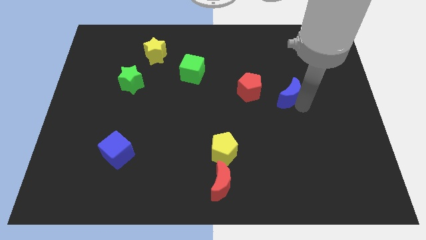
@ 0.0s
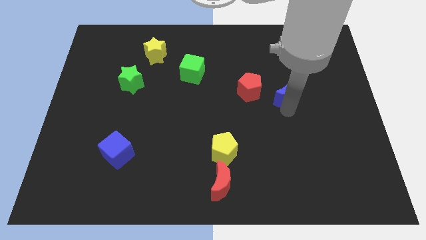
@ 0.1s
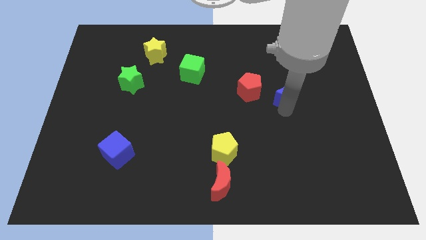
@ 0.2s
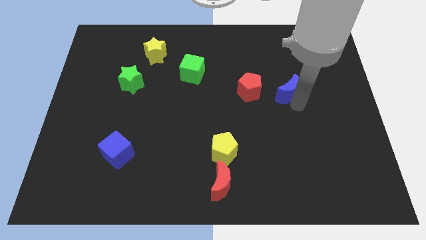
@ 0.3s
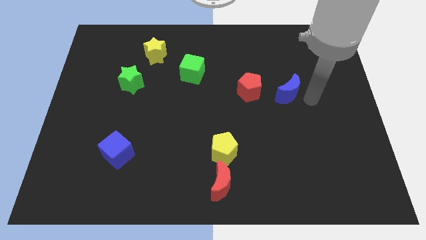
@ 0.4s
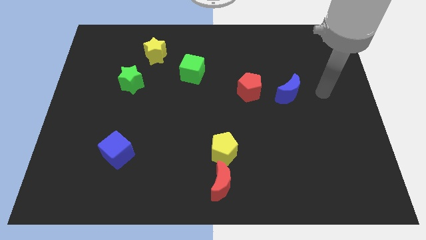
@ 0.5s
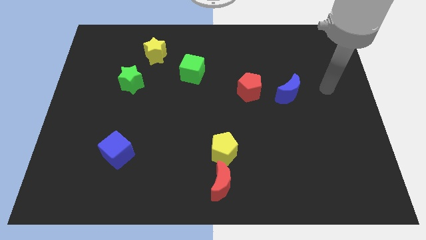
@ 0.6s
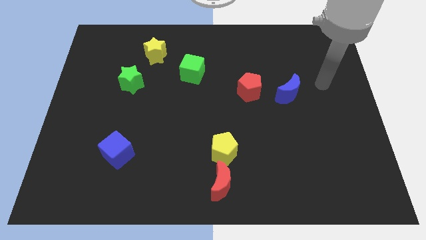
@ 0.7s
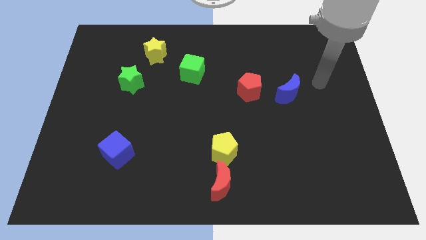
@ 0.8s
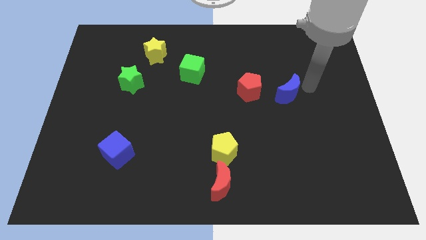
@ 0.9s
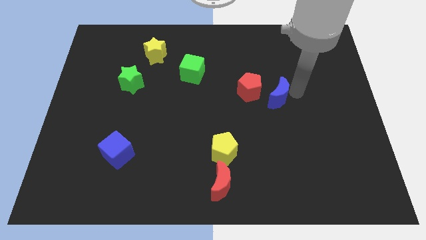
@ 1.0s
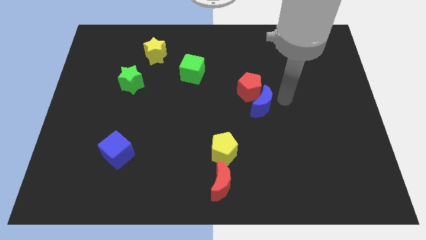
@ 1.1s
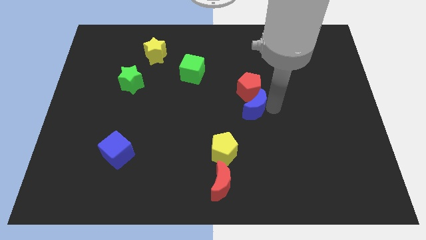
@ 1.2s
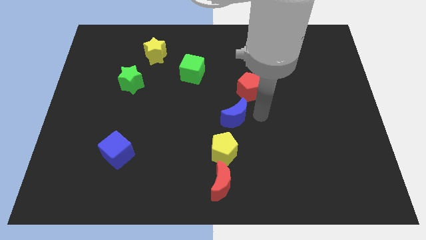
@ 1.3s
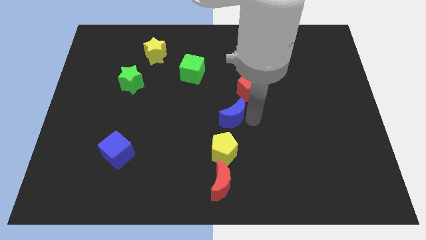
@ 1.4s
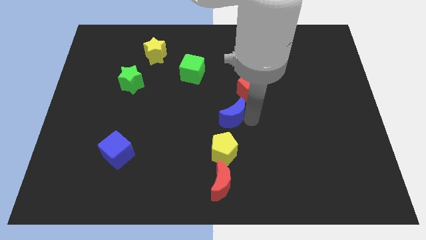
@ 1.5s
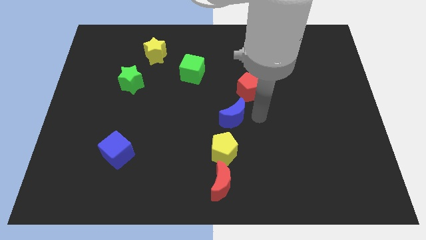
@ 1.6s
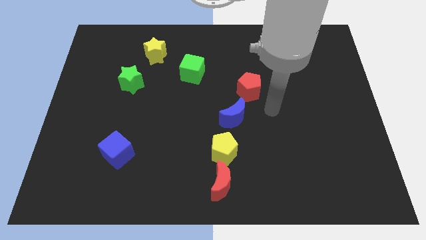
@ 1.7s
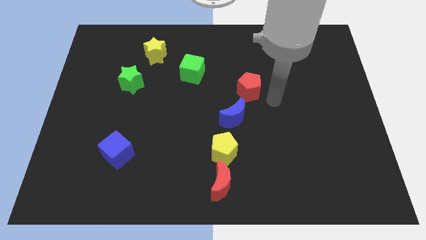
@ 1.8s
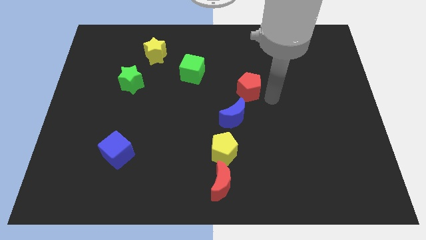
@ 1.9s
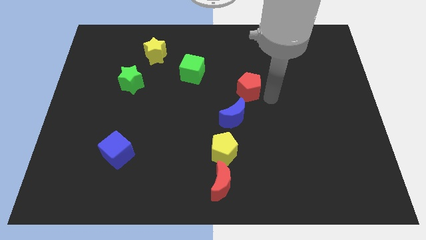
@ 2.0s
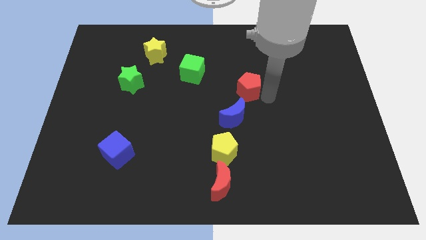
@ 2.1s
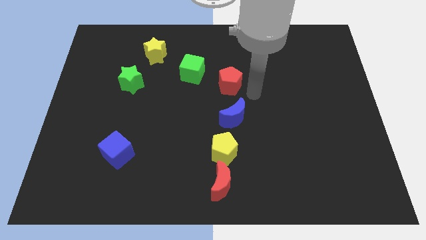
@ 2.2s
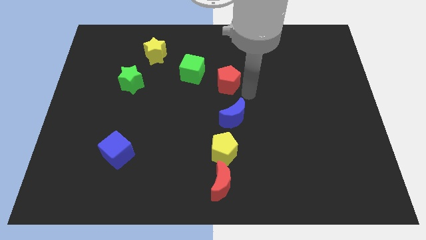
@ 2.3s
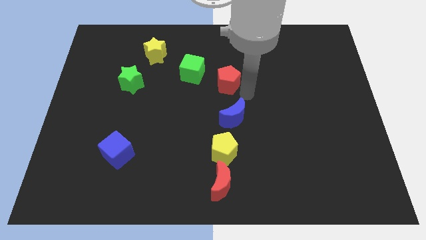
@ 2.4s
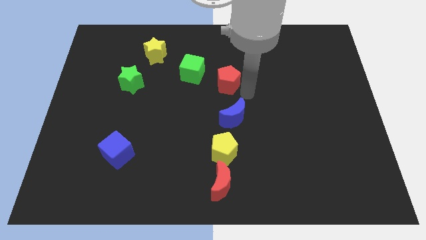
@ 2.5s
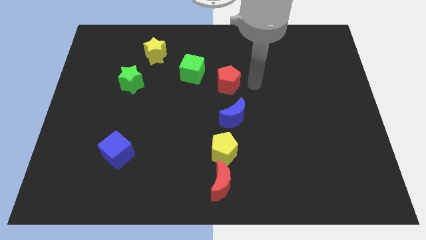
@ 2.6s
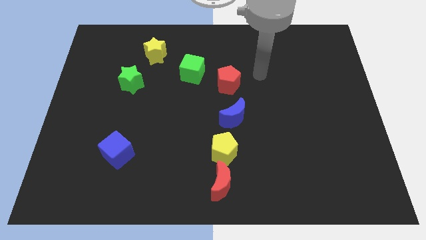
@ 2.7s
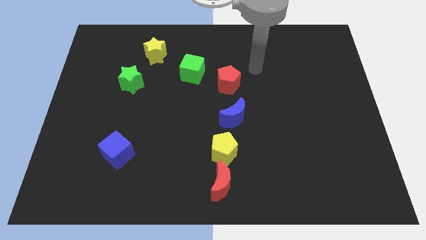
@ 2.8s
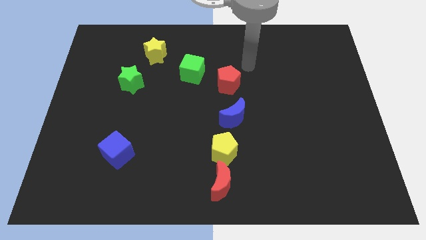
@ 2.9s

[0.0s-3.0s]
point your arm above red pentagon

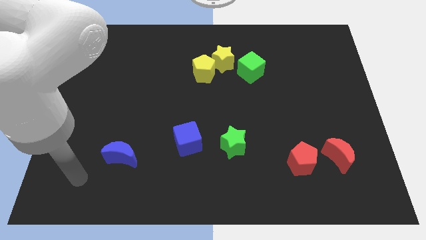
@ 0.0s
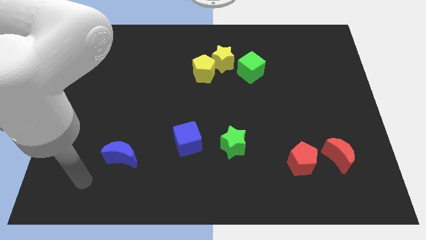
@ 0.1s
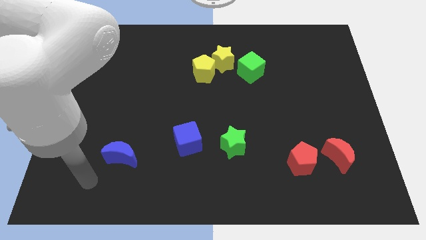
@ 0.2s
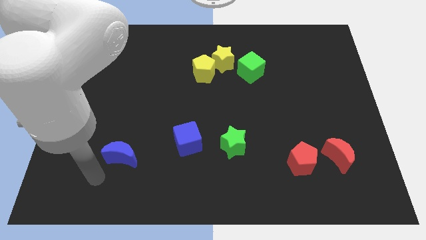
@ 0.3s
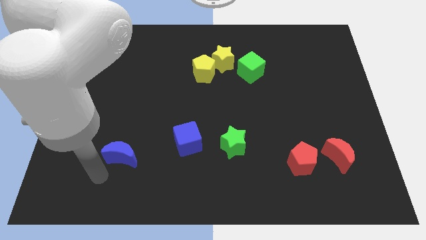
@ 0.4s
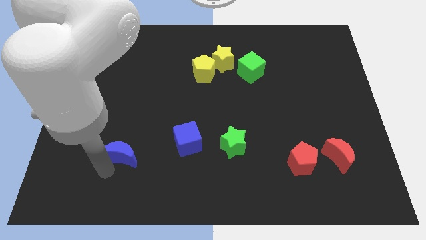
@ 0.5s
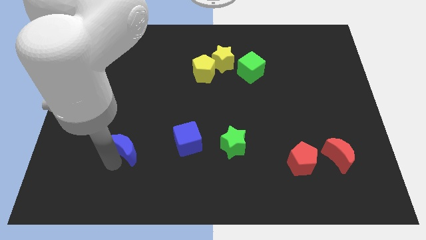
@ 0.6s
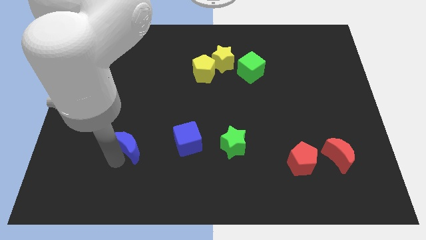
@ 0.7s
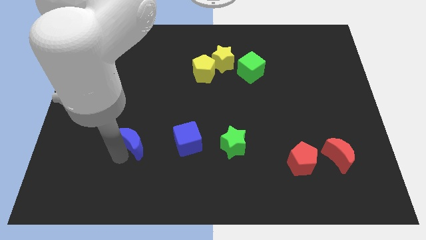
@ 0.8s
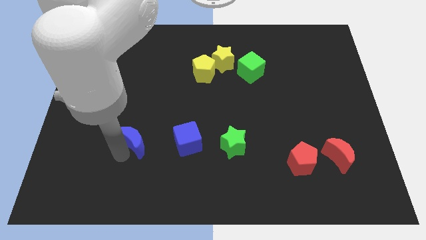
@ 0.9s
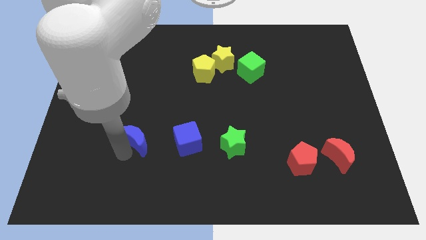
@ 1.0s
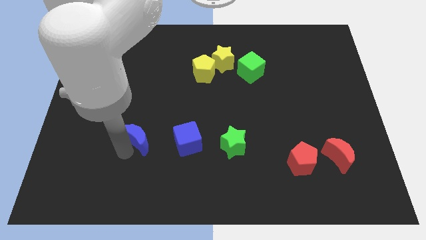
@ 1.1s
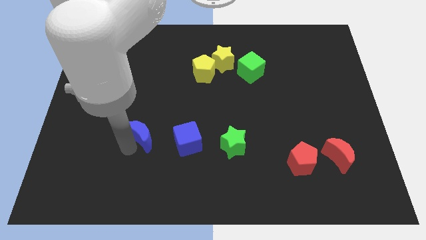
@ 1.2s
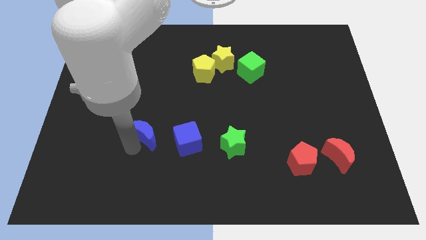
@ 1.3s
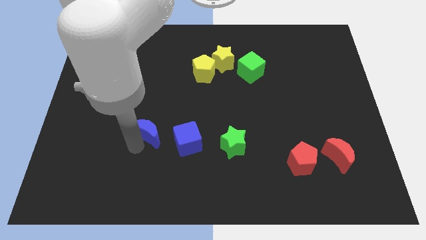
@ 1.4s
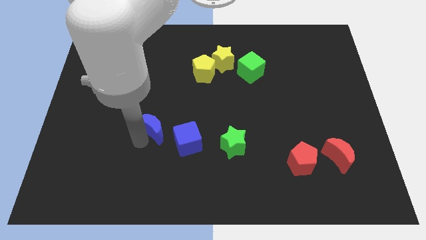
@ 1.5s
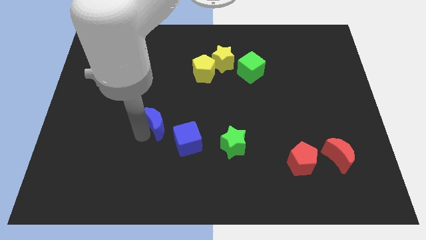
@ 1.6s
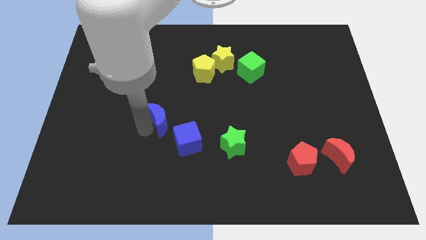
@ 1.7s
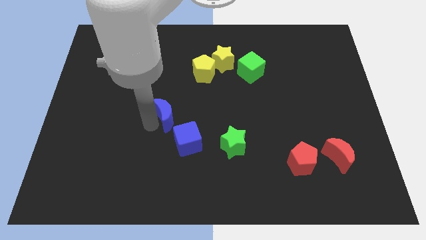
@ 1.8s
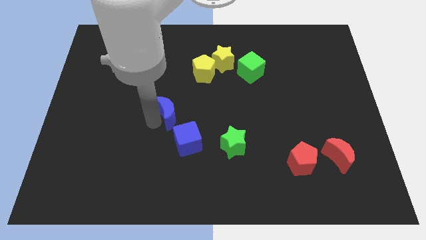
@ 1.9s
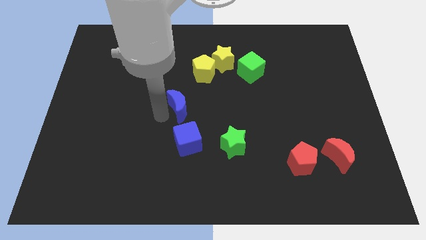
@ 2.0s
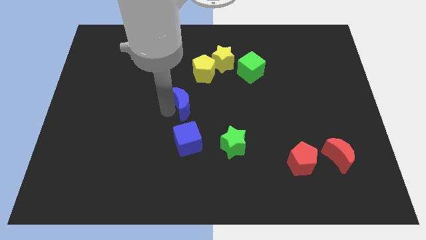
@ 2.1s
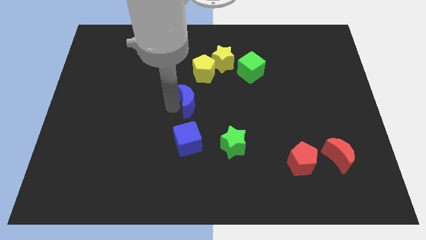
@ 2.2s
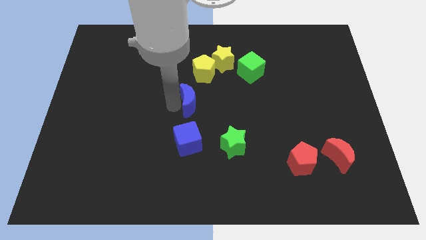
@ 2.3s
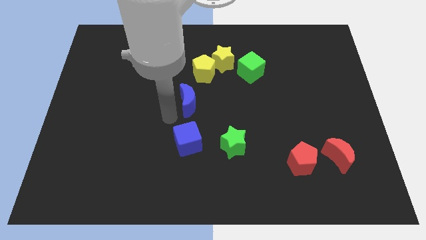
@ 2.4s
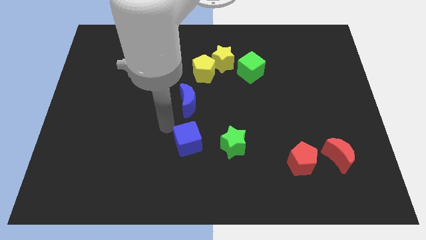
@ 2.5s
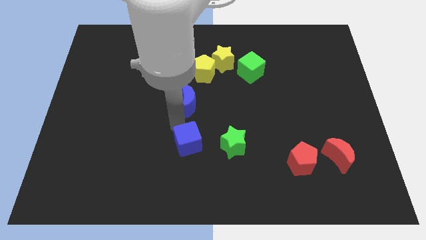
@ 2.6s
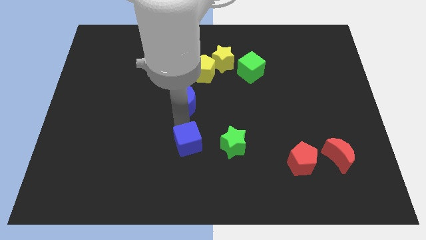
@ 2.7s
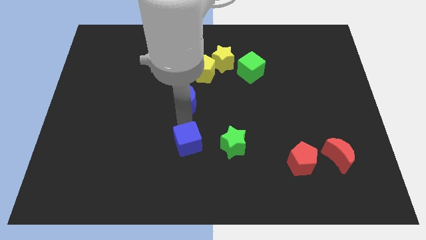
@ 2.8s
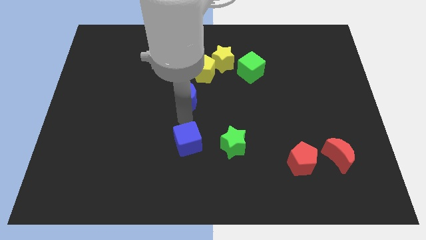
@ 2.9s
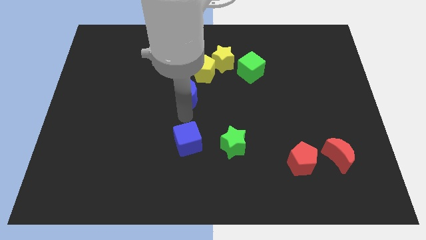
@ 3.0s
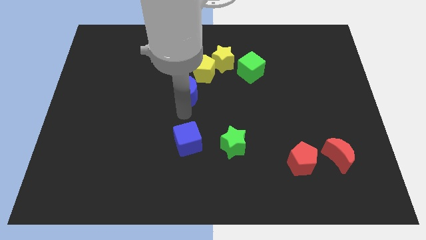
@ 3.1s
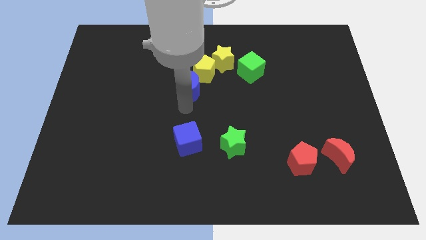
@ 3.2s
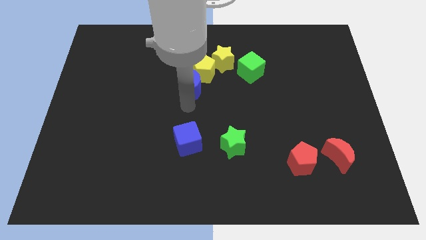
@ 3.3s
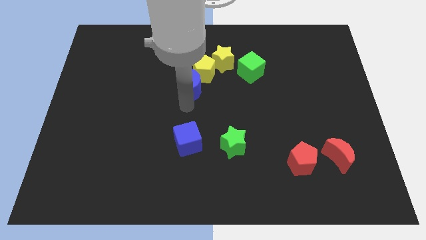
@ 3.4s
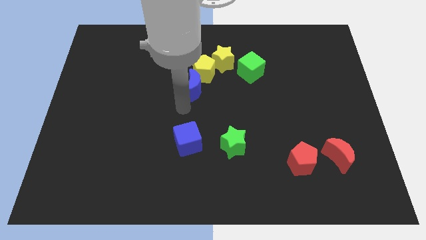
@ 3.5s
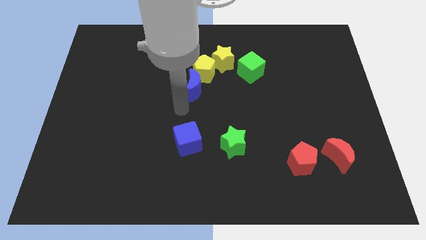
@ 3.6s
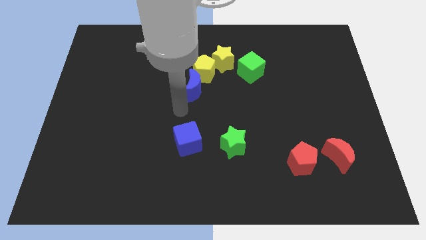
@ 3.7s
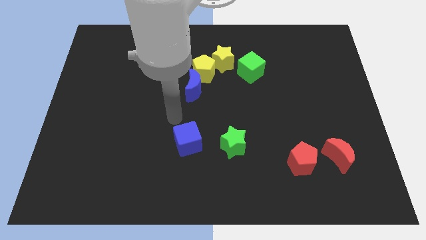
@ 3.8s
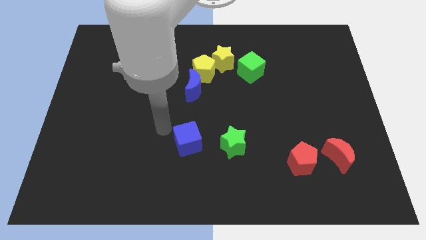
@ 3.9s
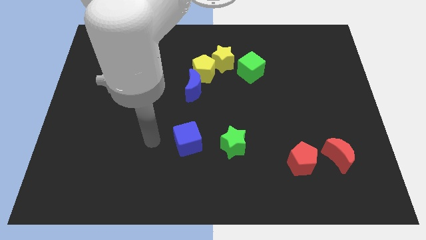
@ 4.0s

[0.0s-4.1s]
push the blue moon close to the yellow pentagon

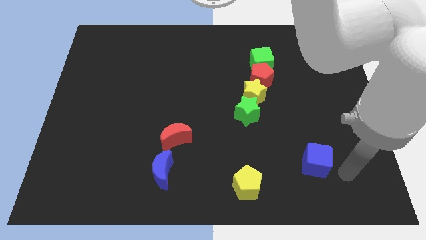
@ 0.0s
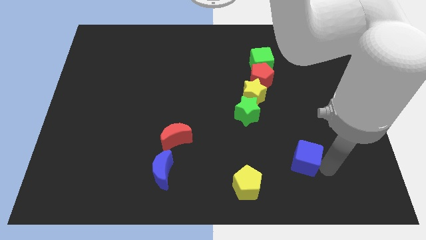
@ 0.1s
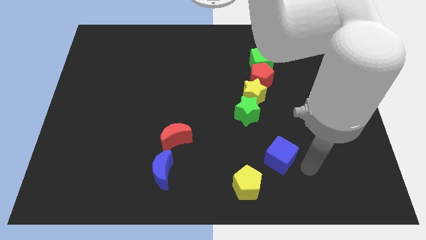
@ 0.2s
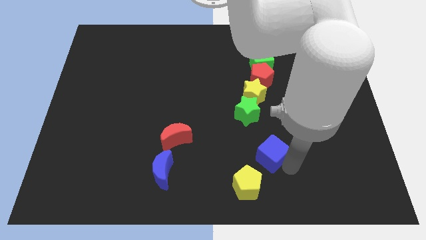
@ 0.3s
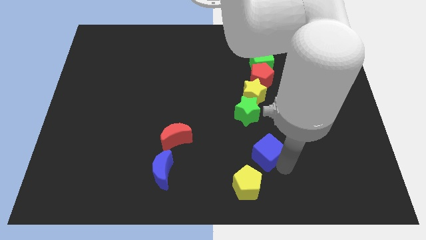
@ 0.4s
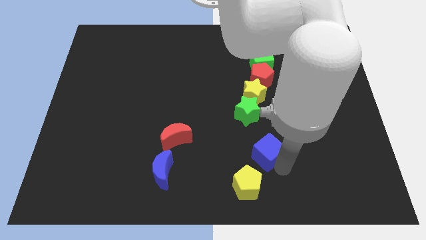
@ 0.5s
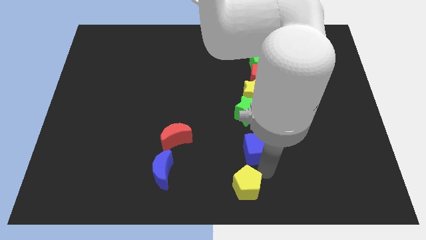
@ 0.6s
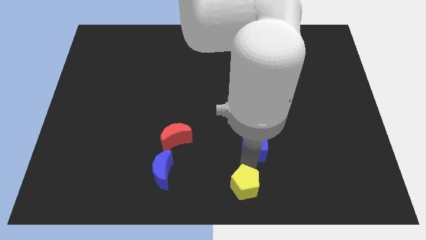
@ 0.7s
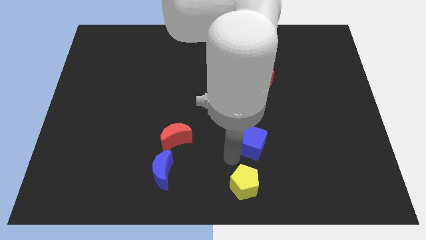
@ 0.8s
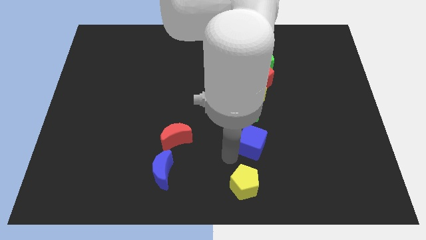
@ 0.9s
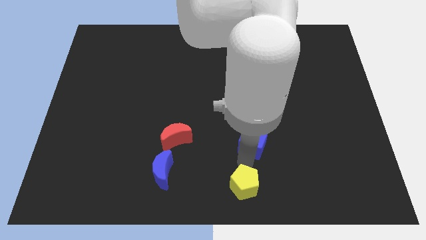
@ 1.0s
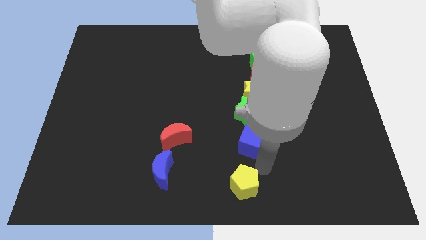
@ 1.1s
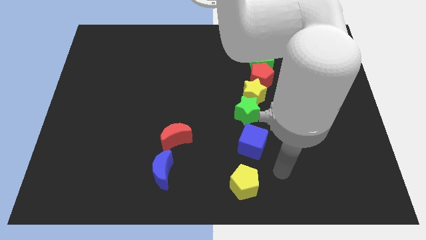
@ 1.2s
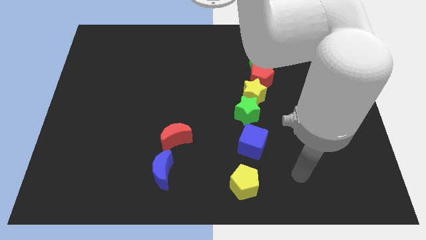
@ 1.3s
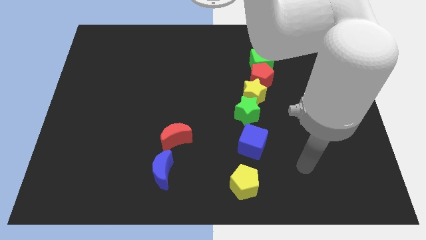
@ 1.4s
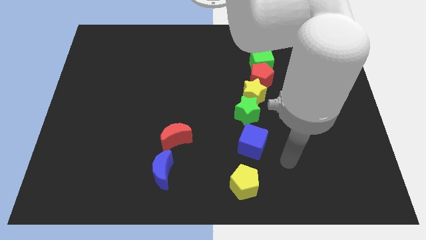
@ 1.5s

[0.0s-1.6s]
push the blue cube in between the green star and yellow pentagon

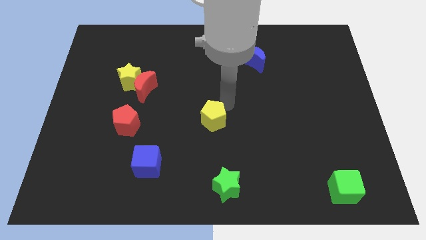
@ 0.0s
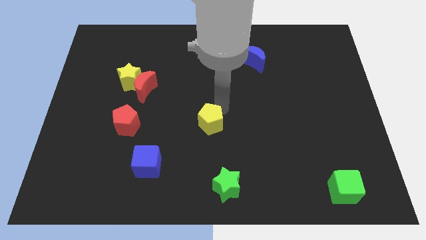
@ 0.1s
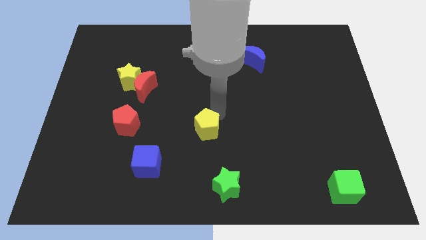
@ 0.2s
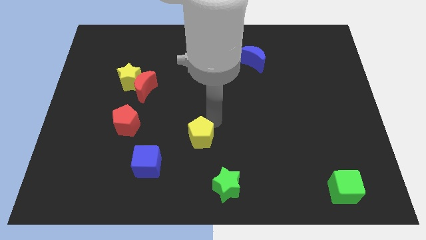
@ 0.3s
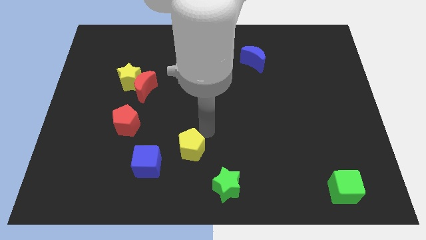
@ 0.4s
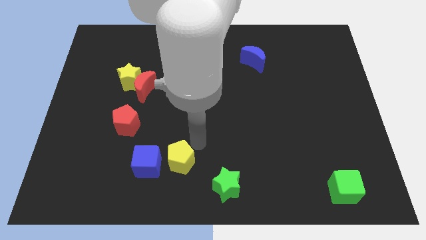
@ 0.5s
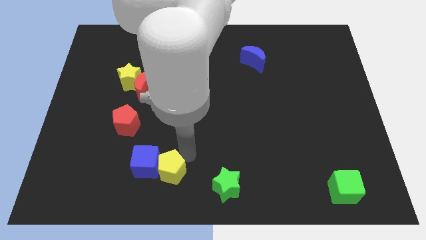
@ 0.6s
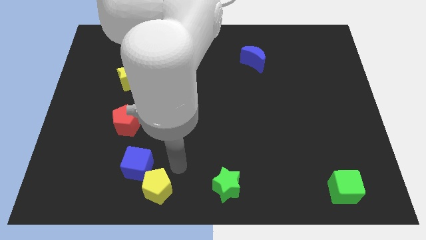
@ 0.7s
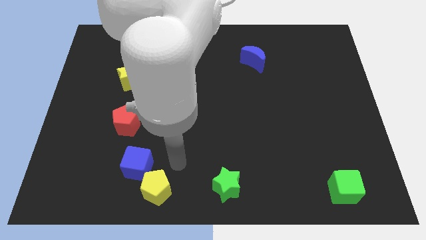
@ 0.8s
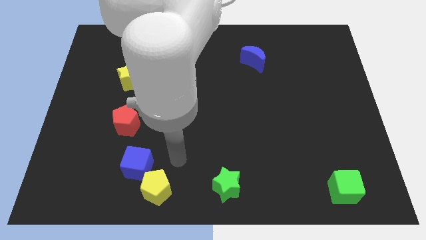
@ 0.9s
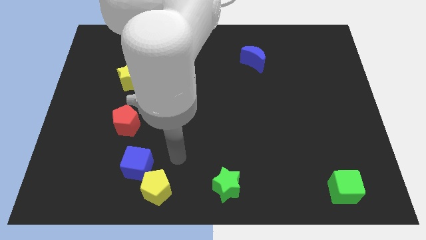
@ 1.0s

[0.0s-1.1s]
push yellow pentagon at the bottom
